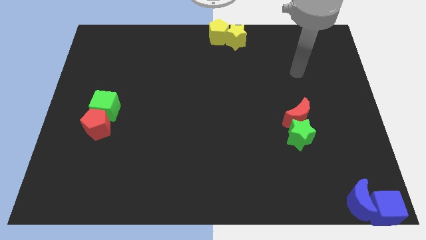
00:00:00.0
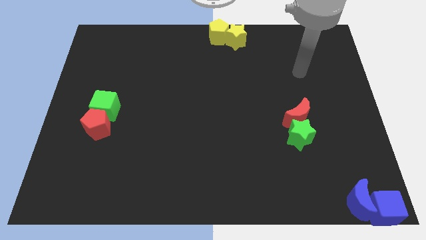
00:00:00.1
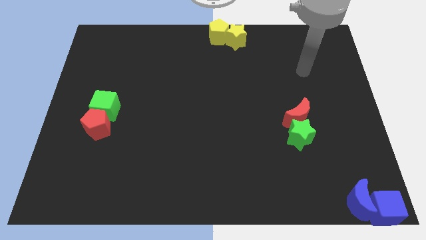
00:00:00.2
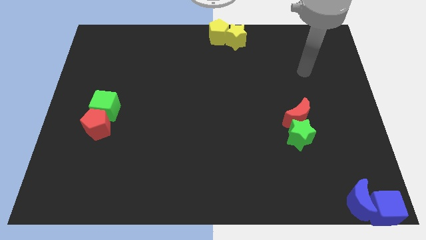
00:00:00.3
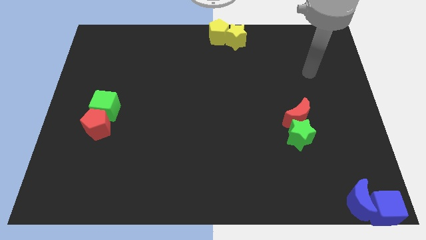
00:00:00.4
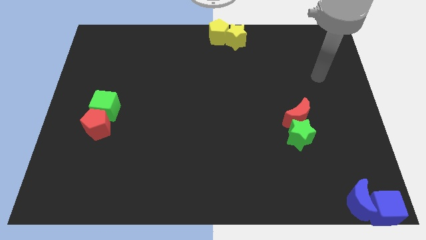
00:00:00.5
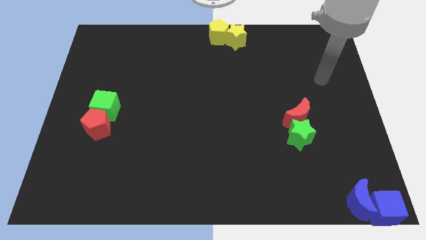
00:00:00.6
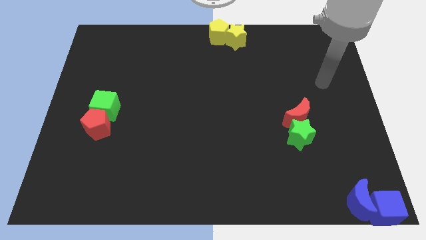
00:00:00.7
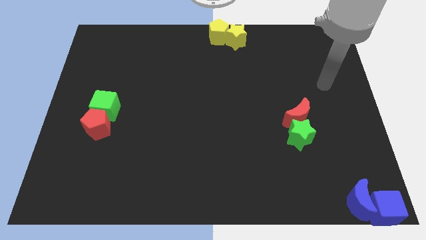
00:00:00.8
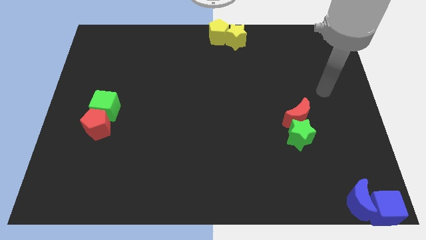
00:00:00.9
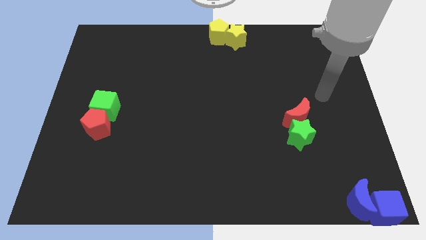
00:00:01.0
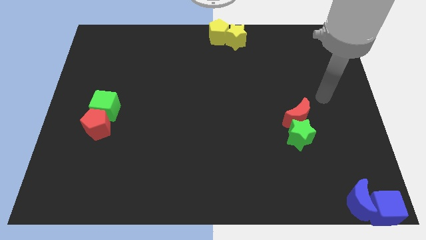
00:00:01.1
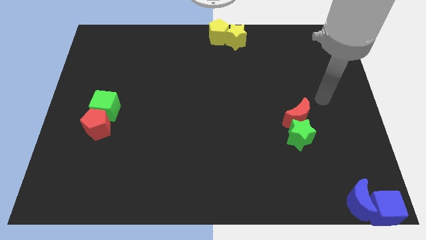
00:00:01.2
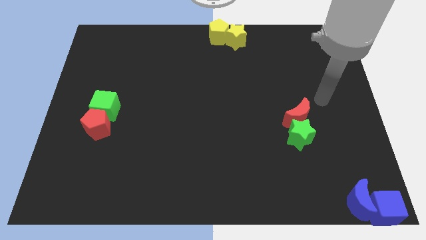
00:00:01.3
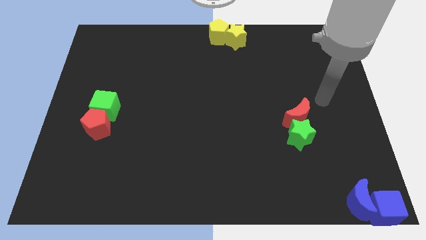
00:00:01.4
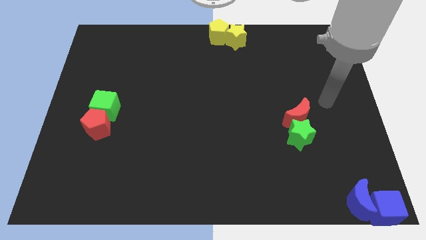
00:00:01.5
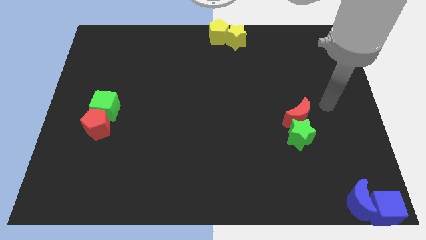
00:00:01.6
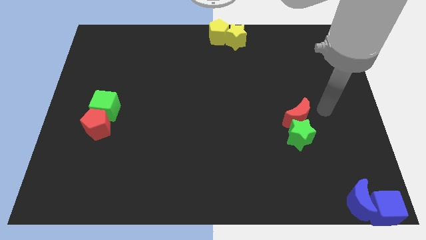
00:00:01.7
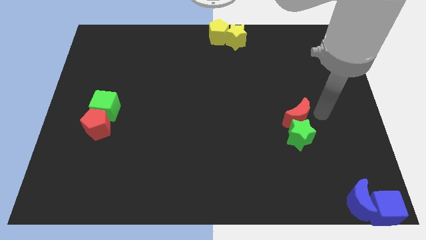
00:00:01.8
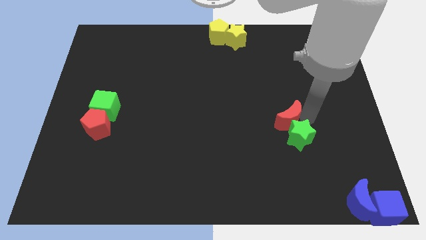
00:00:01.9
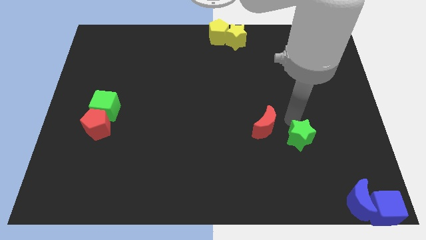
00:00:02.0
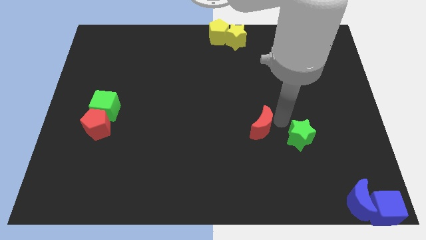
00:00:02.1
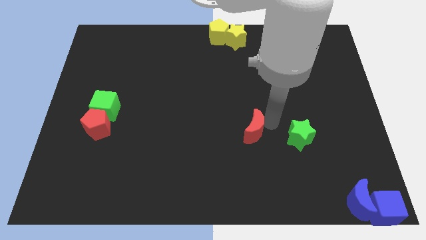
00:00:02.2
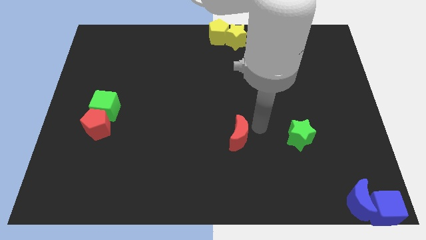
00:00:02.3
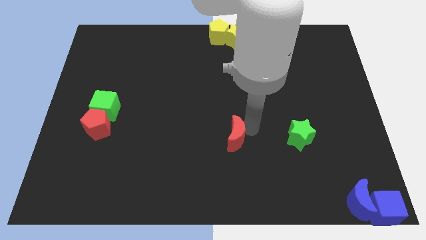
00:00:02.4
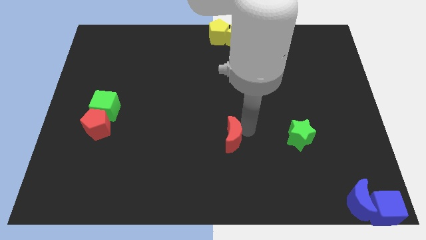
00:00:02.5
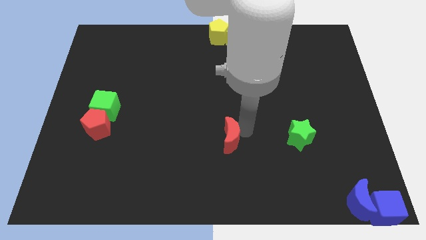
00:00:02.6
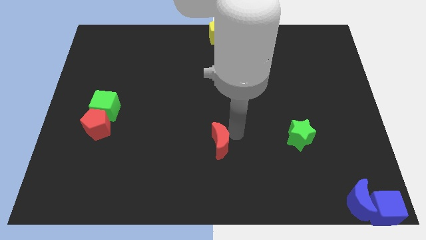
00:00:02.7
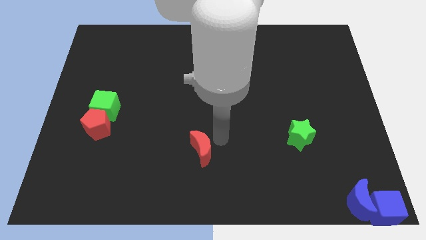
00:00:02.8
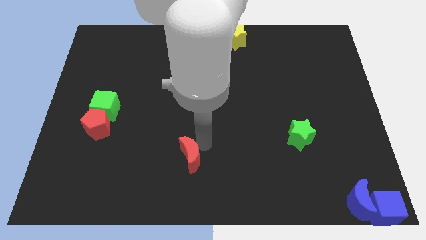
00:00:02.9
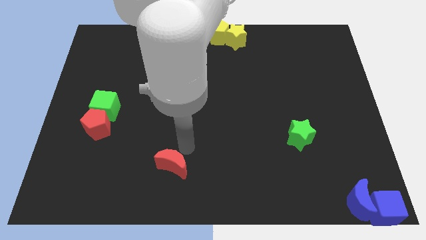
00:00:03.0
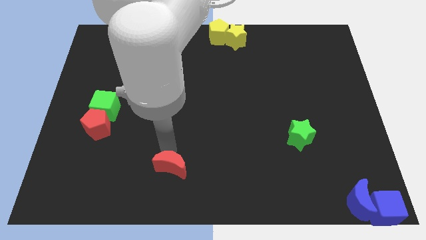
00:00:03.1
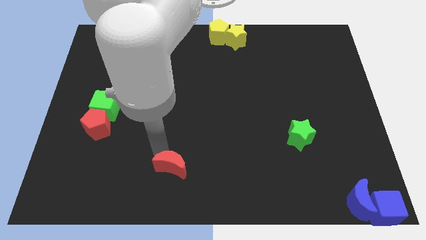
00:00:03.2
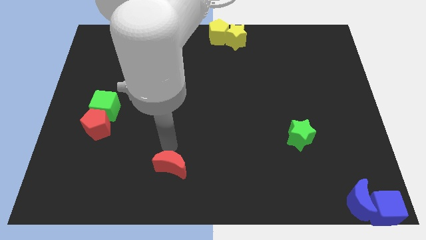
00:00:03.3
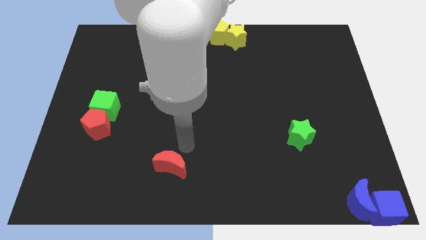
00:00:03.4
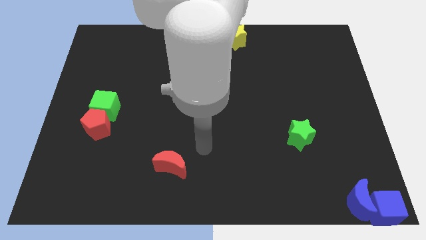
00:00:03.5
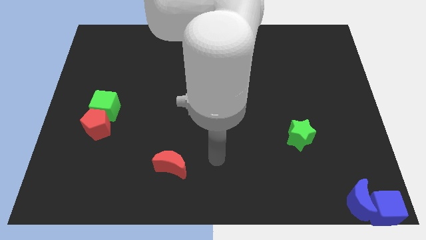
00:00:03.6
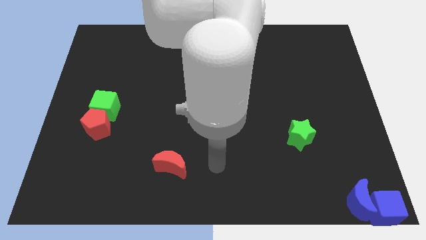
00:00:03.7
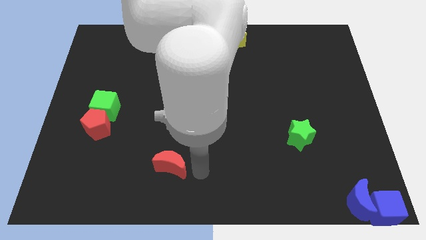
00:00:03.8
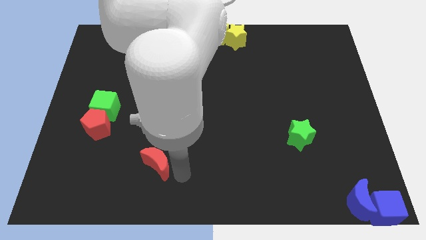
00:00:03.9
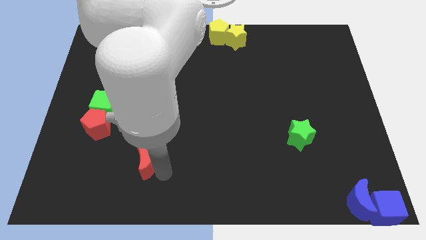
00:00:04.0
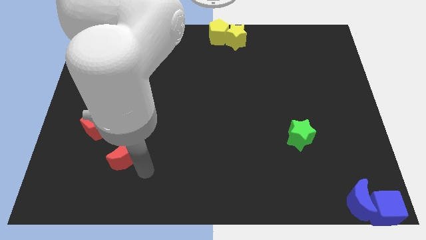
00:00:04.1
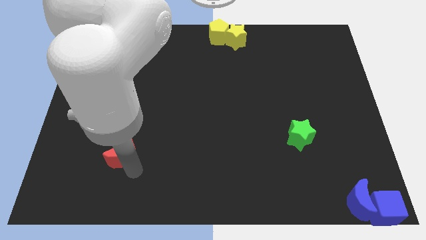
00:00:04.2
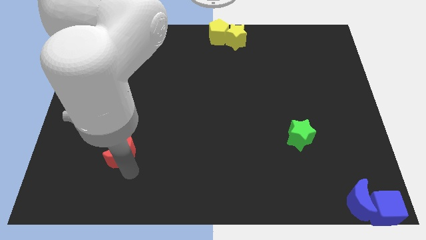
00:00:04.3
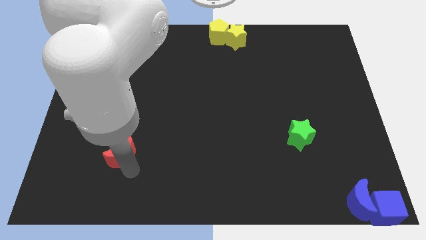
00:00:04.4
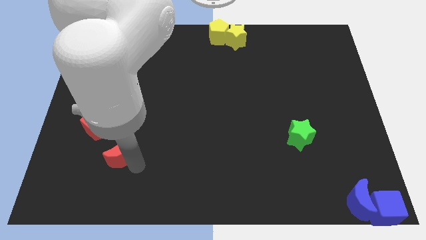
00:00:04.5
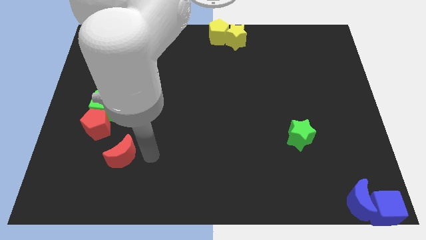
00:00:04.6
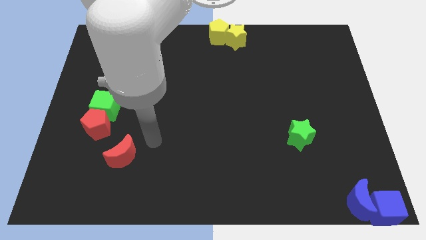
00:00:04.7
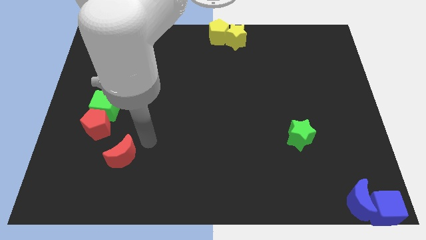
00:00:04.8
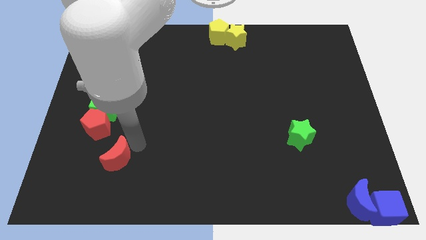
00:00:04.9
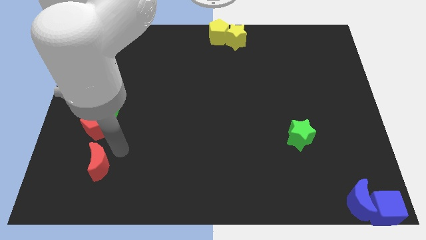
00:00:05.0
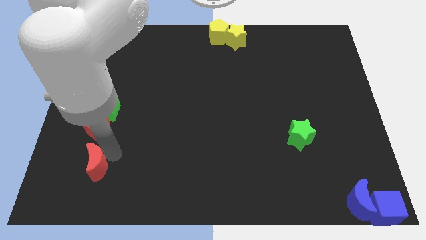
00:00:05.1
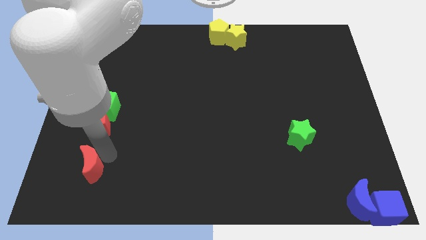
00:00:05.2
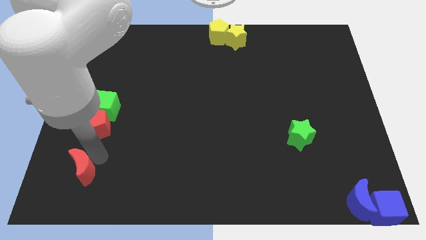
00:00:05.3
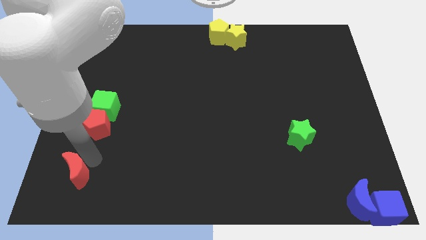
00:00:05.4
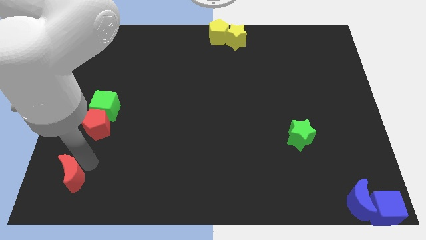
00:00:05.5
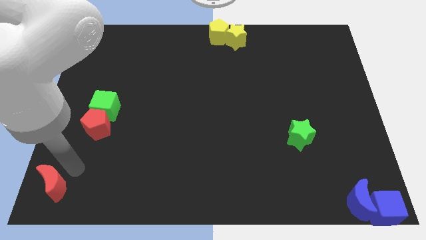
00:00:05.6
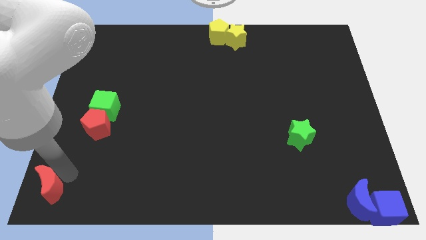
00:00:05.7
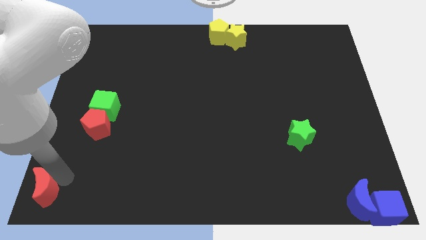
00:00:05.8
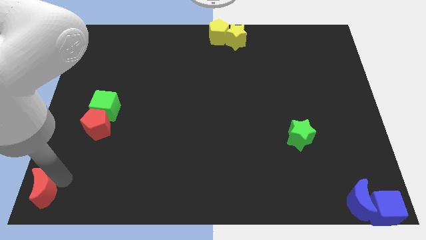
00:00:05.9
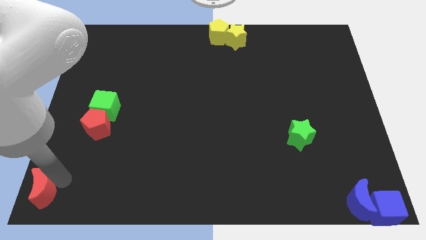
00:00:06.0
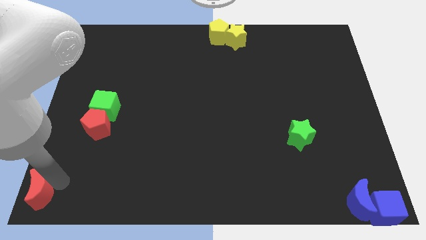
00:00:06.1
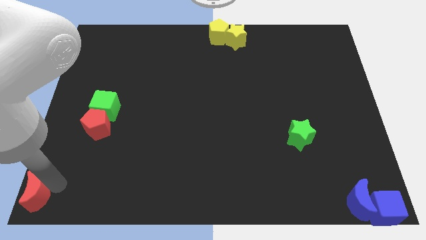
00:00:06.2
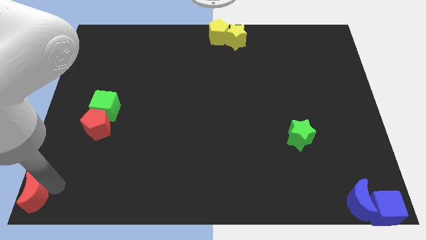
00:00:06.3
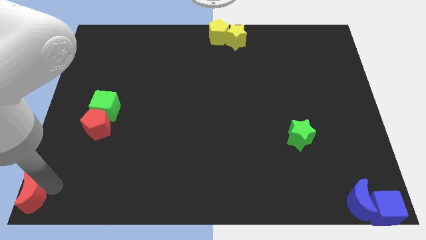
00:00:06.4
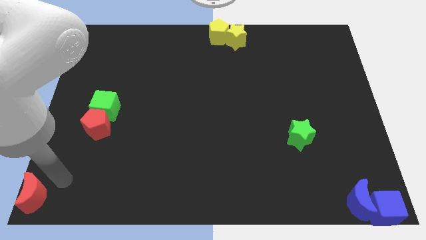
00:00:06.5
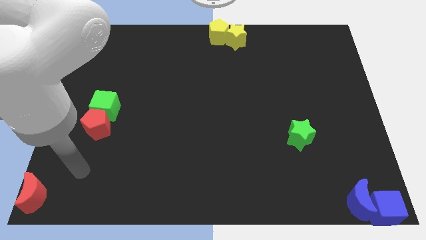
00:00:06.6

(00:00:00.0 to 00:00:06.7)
separate the red moon from the green star

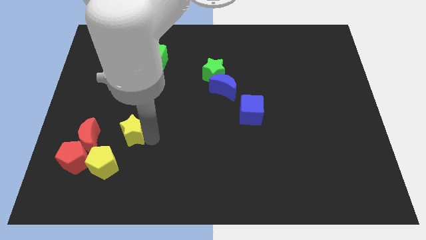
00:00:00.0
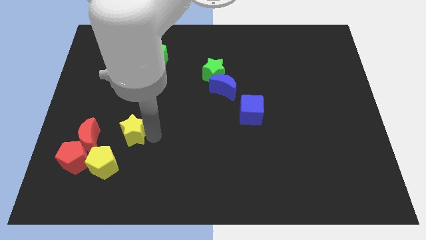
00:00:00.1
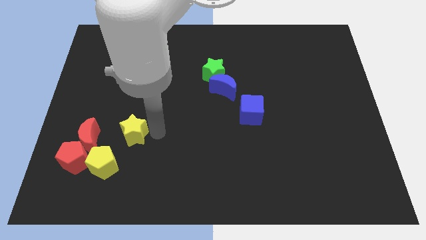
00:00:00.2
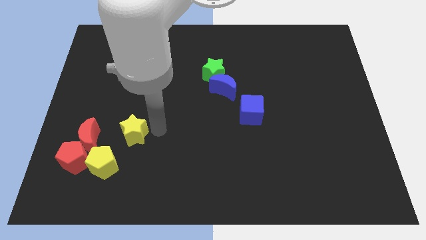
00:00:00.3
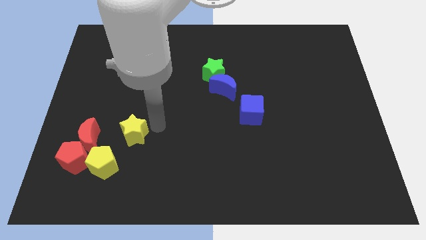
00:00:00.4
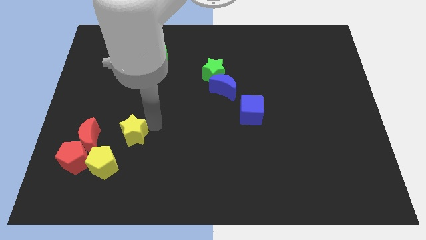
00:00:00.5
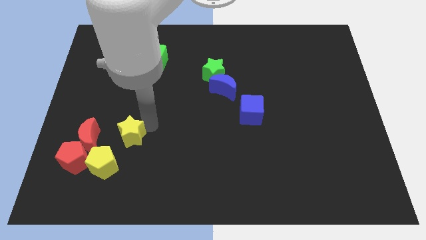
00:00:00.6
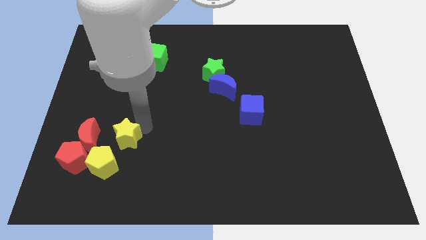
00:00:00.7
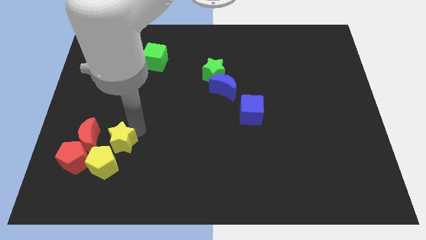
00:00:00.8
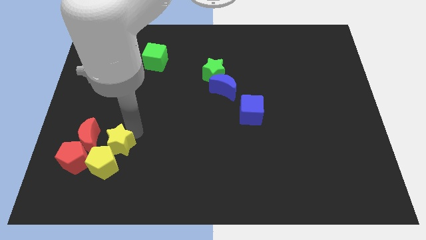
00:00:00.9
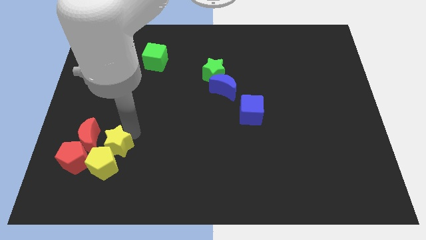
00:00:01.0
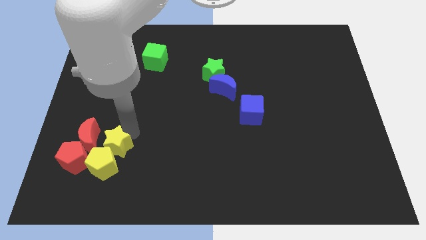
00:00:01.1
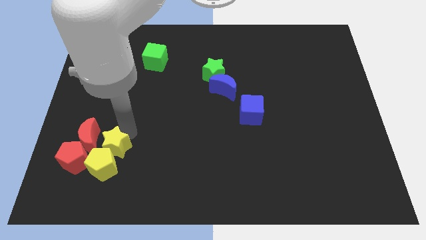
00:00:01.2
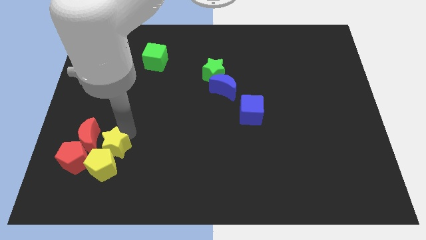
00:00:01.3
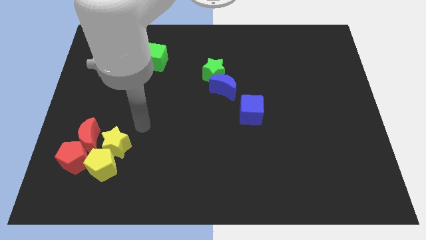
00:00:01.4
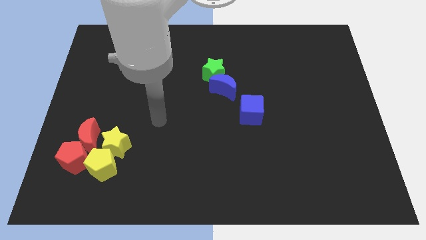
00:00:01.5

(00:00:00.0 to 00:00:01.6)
move the yellow star into the yellow pentagon

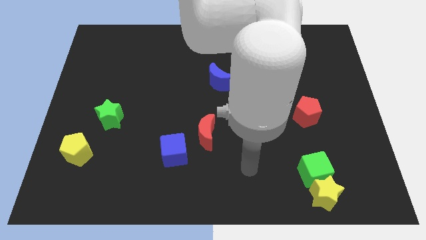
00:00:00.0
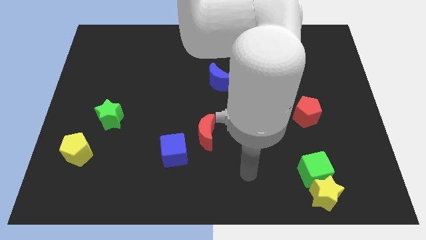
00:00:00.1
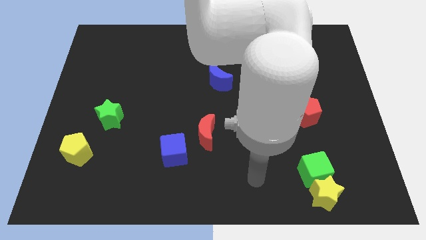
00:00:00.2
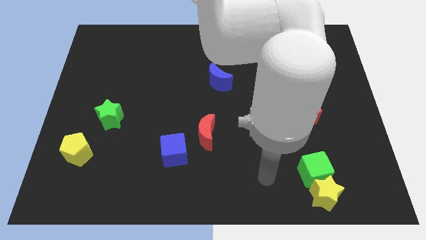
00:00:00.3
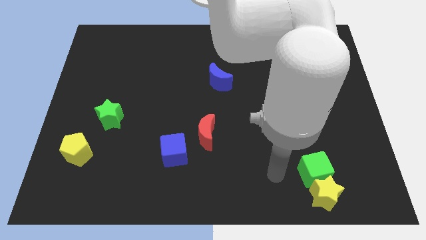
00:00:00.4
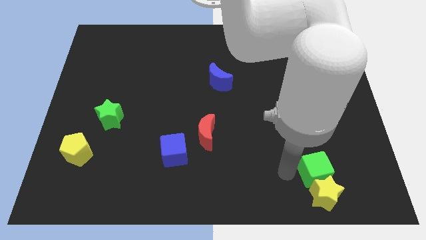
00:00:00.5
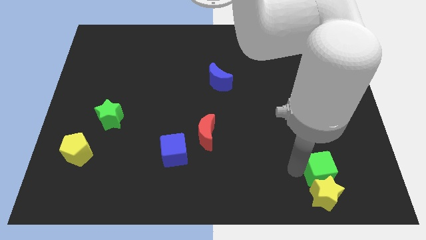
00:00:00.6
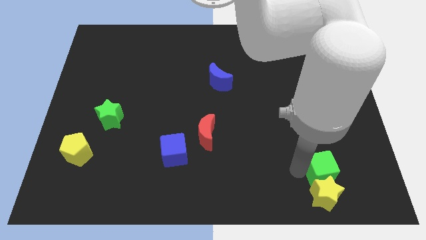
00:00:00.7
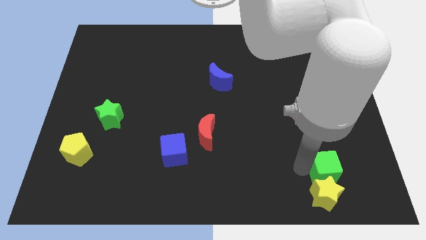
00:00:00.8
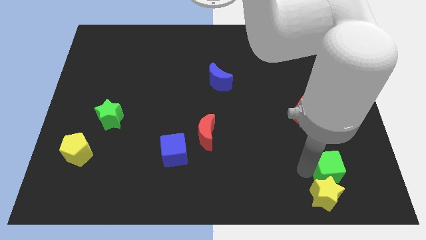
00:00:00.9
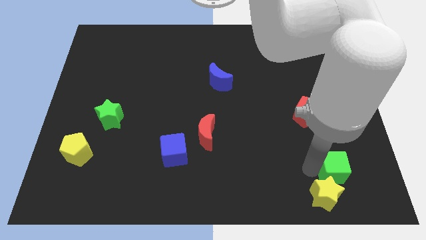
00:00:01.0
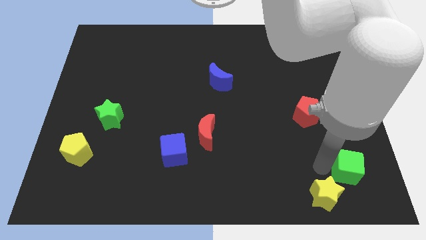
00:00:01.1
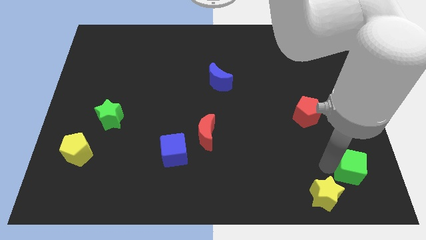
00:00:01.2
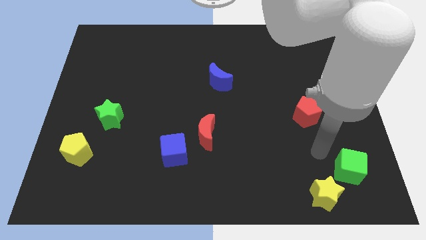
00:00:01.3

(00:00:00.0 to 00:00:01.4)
push the green cube slightly to the right
